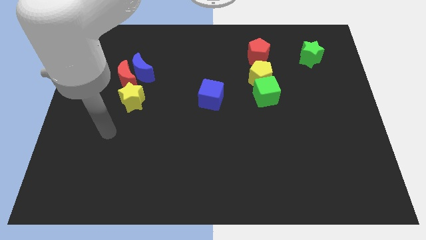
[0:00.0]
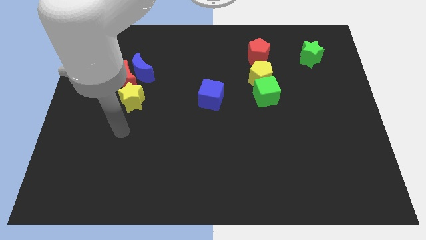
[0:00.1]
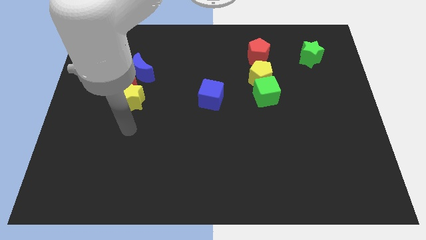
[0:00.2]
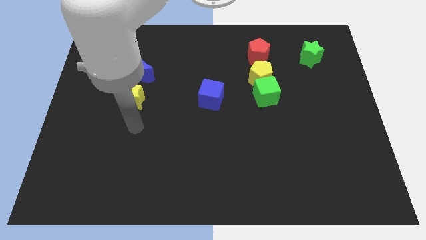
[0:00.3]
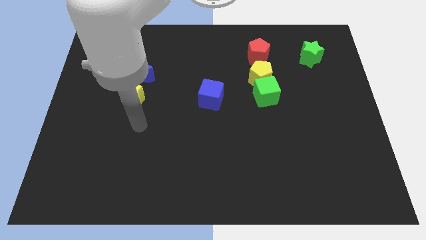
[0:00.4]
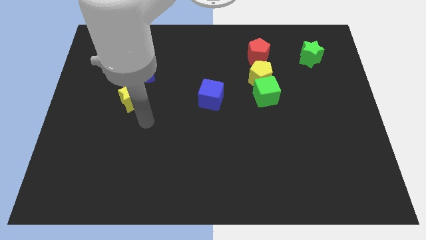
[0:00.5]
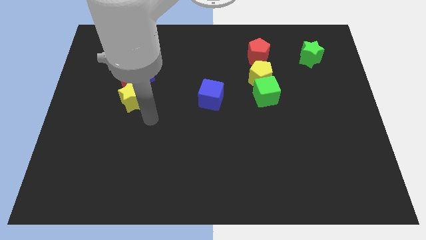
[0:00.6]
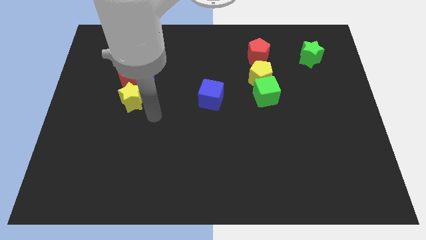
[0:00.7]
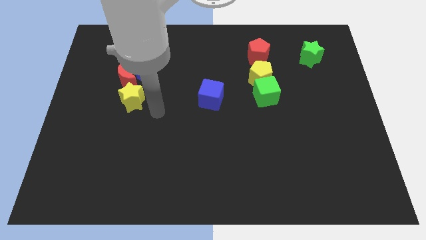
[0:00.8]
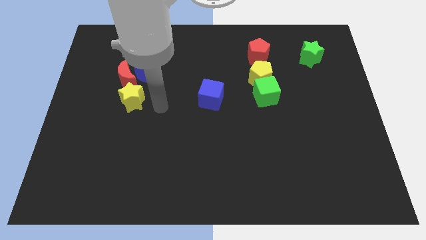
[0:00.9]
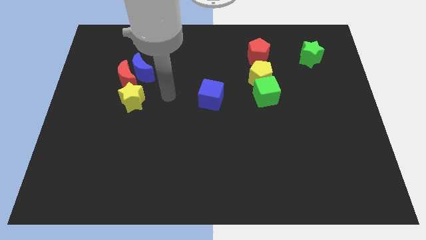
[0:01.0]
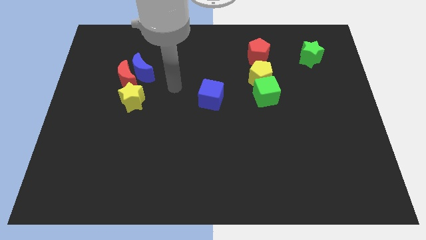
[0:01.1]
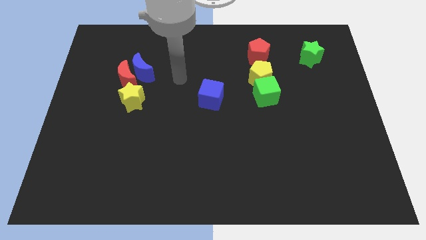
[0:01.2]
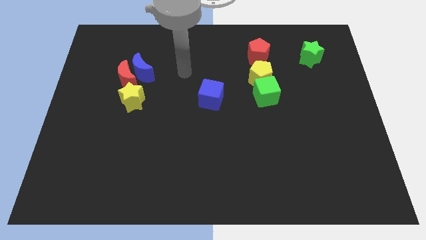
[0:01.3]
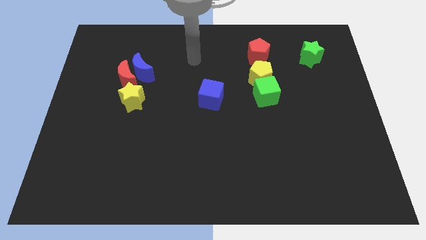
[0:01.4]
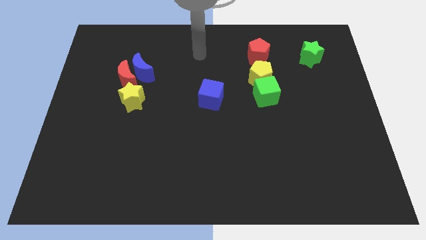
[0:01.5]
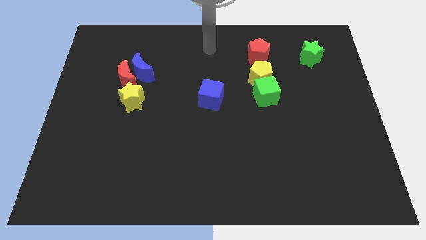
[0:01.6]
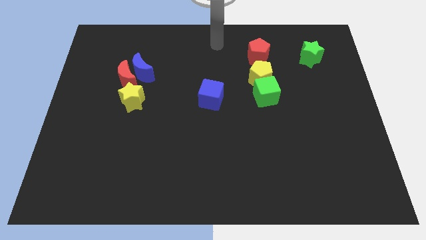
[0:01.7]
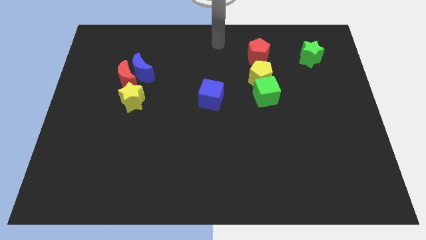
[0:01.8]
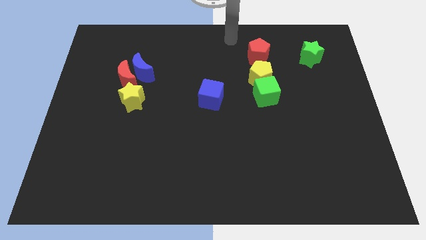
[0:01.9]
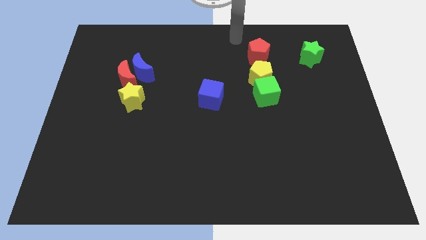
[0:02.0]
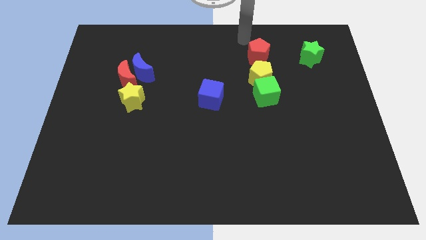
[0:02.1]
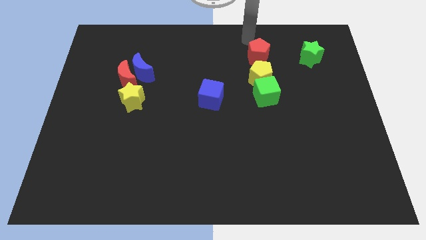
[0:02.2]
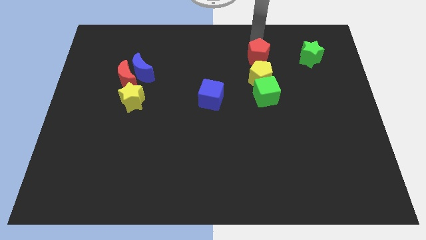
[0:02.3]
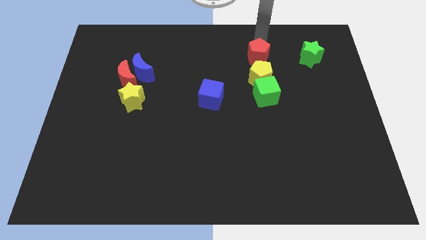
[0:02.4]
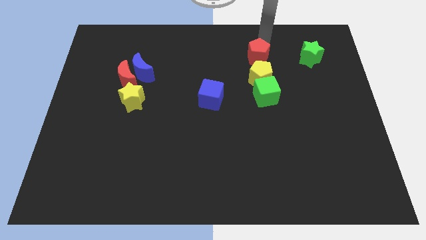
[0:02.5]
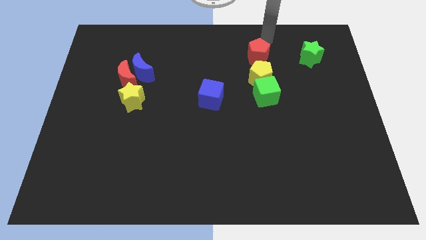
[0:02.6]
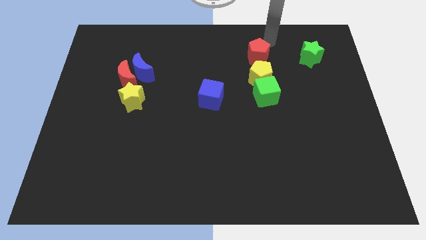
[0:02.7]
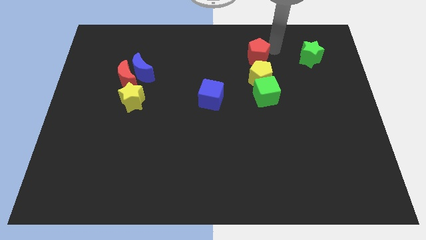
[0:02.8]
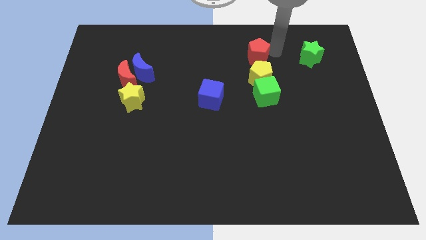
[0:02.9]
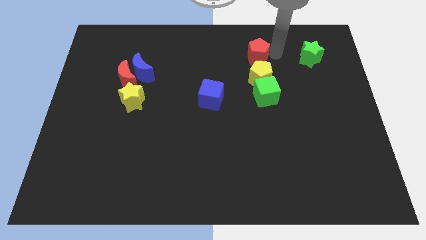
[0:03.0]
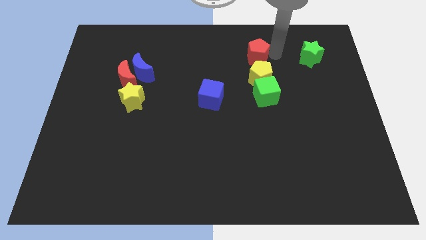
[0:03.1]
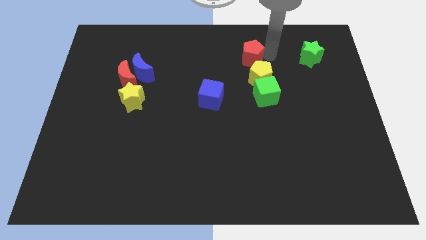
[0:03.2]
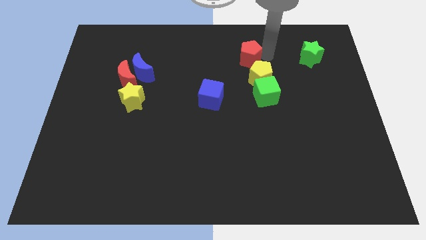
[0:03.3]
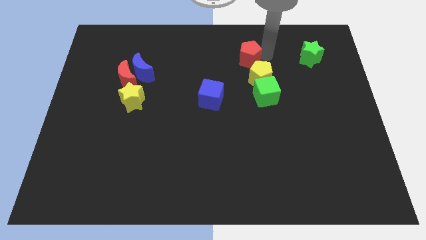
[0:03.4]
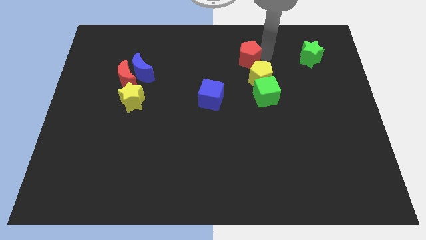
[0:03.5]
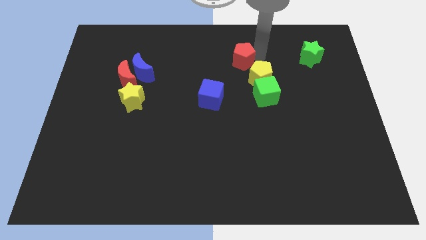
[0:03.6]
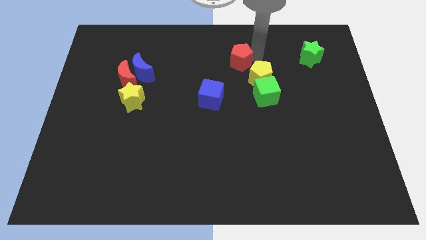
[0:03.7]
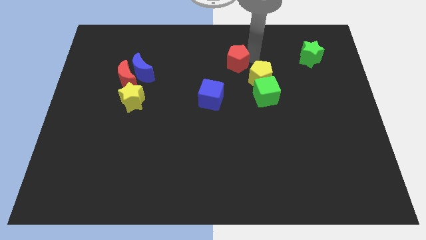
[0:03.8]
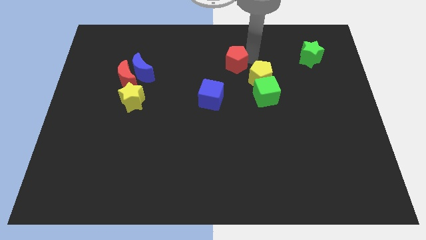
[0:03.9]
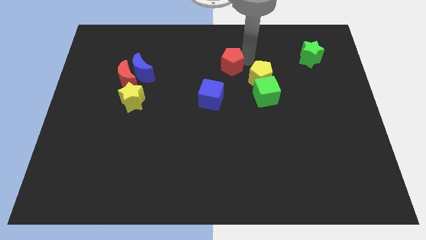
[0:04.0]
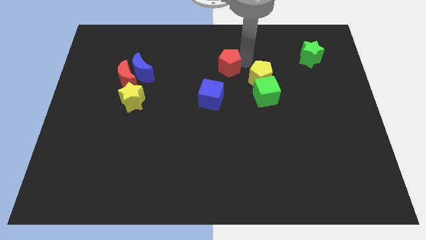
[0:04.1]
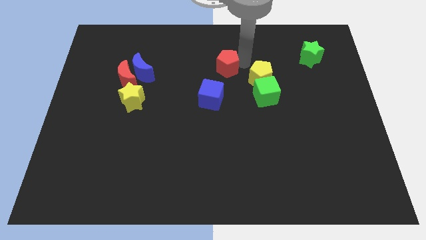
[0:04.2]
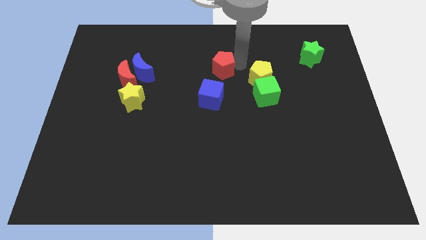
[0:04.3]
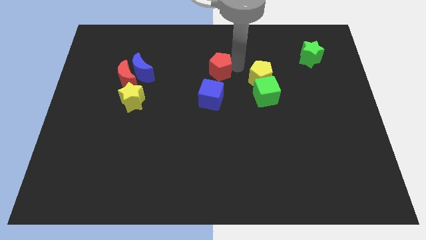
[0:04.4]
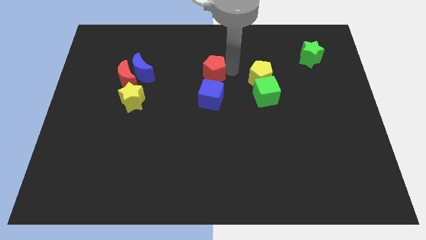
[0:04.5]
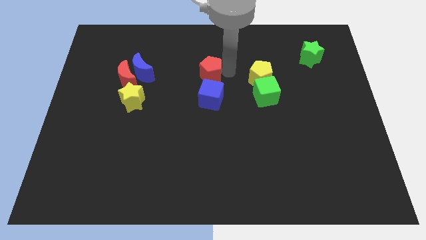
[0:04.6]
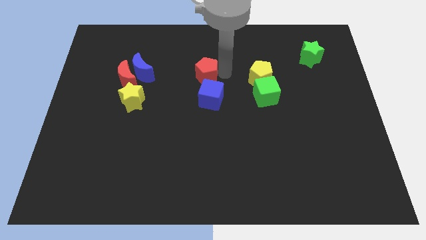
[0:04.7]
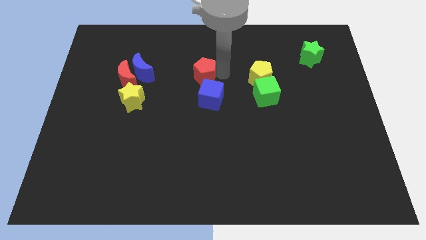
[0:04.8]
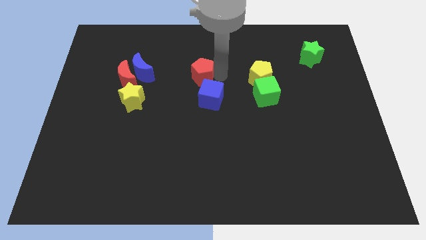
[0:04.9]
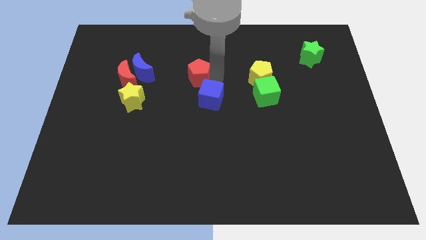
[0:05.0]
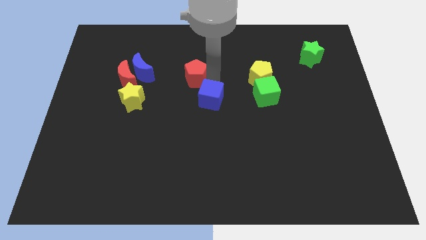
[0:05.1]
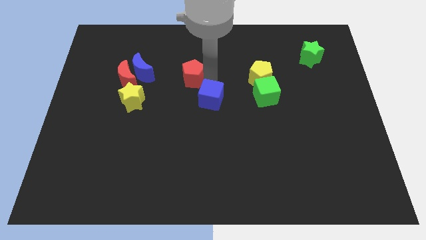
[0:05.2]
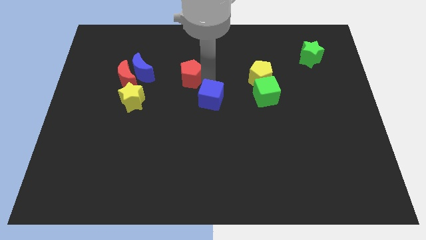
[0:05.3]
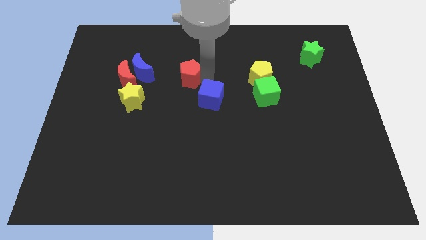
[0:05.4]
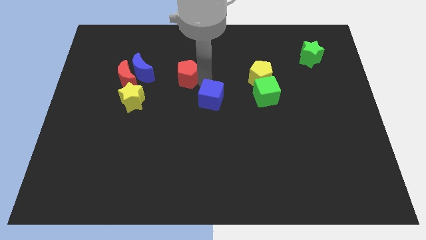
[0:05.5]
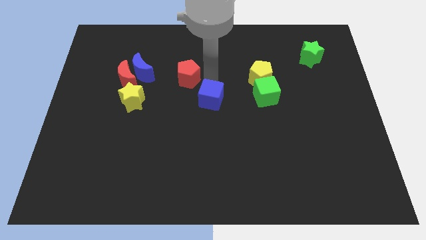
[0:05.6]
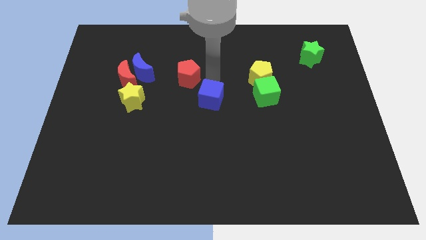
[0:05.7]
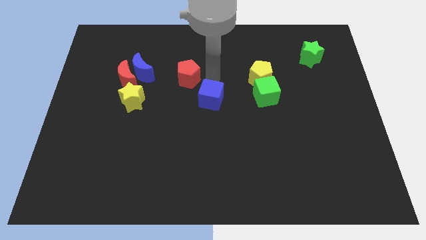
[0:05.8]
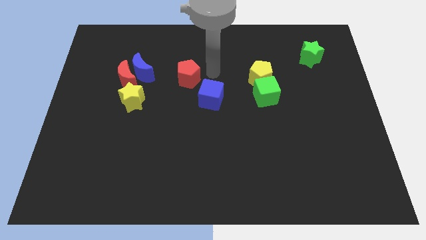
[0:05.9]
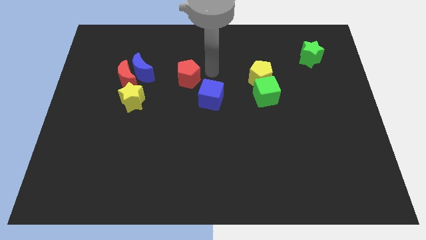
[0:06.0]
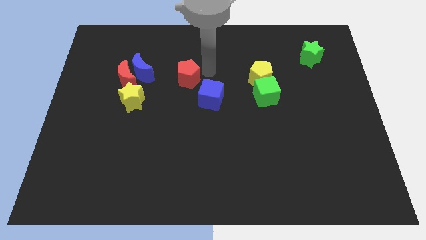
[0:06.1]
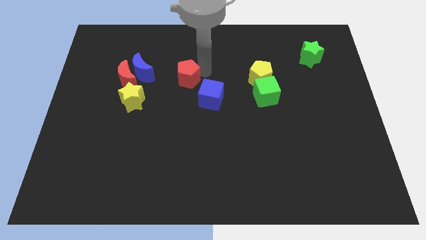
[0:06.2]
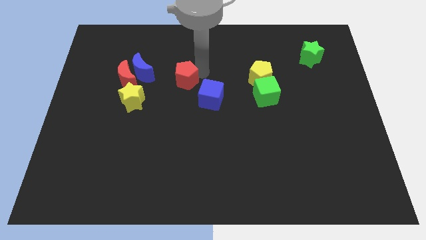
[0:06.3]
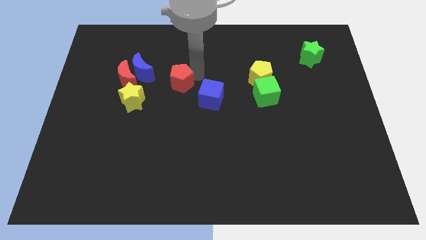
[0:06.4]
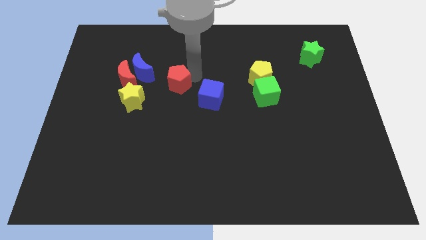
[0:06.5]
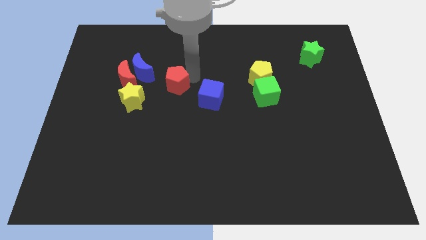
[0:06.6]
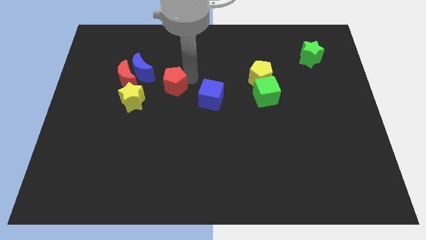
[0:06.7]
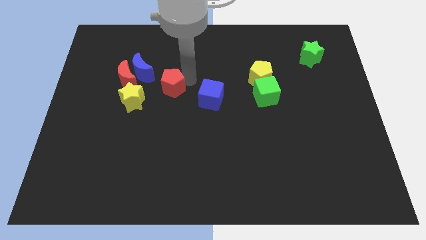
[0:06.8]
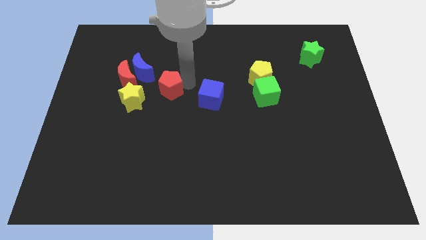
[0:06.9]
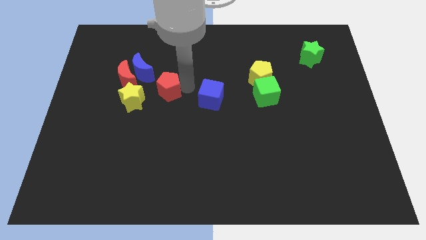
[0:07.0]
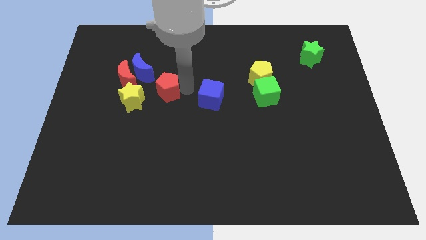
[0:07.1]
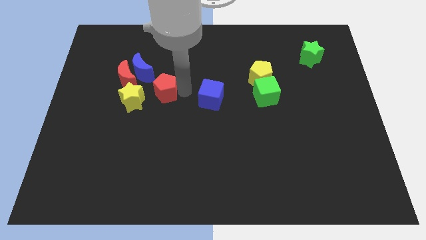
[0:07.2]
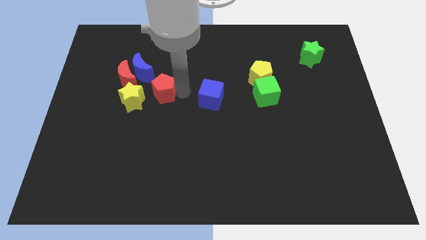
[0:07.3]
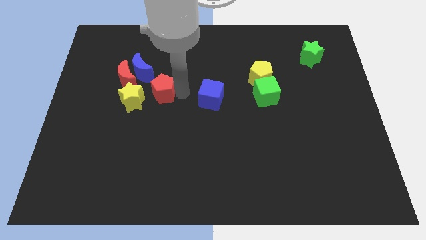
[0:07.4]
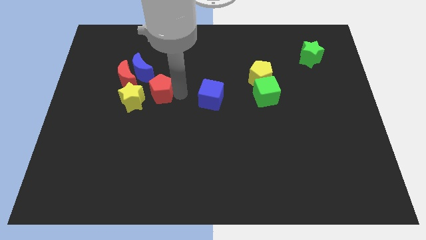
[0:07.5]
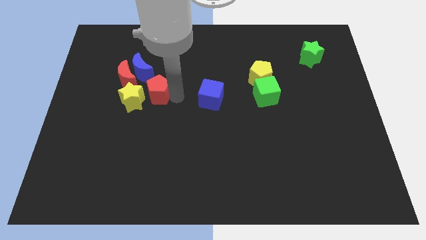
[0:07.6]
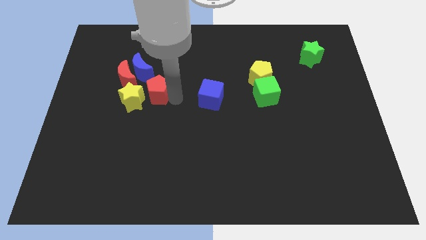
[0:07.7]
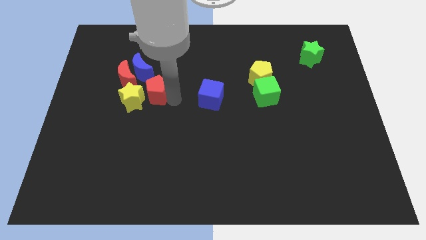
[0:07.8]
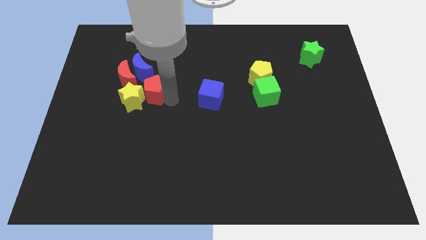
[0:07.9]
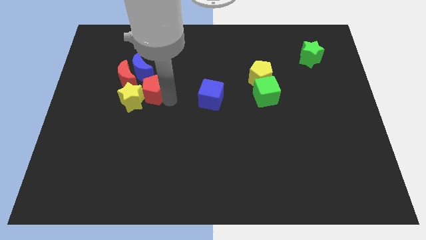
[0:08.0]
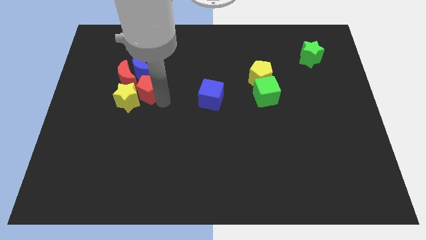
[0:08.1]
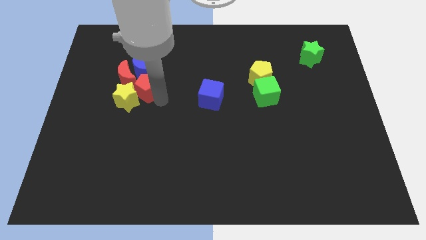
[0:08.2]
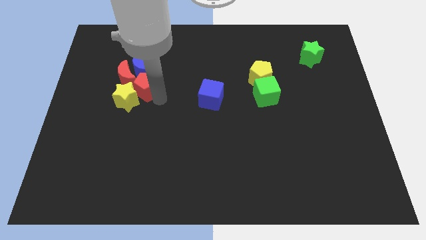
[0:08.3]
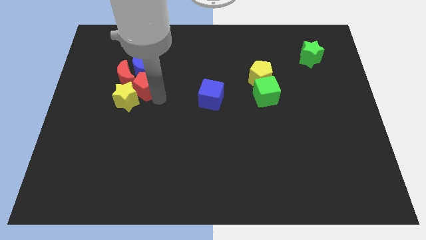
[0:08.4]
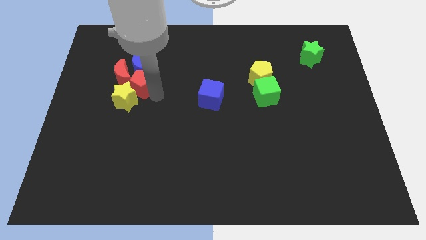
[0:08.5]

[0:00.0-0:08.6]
push the red pentagon close to the red moon
